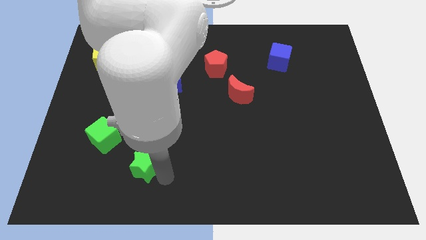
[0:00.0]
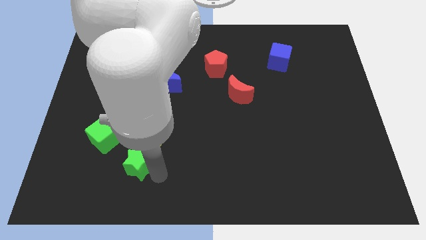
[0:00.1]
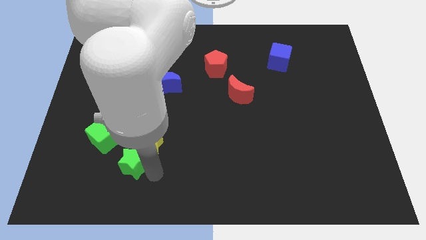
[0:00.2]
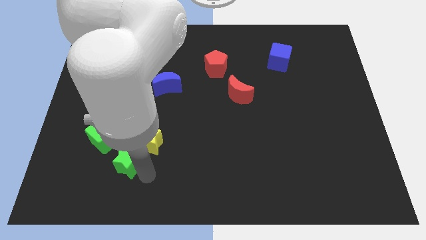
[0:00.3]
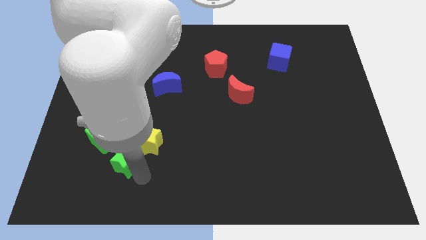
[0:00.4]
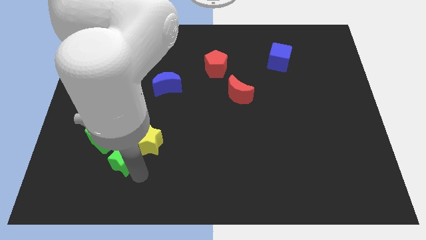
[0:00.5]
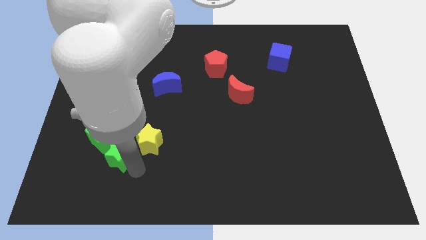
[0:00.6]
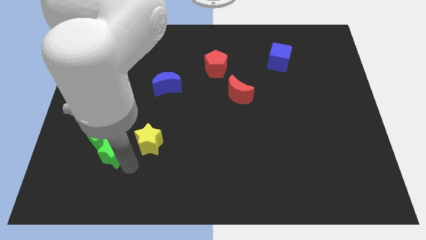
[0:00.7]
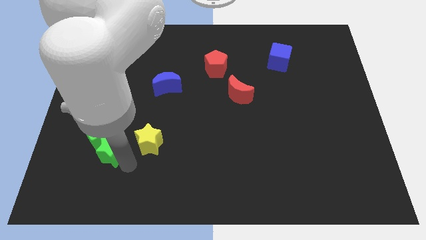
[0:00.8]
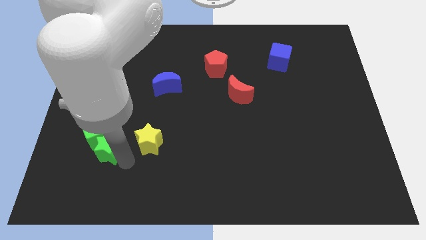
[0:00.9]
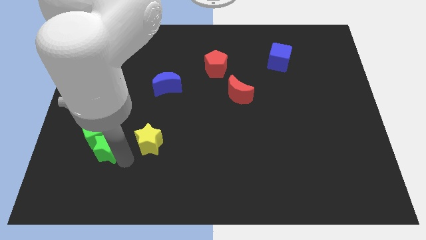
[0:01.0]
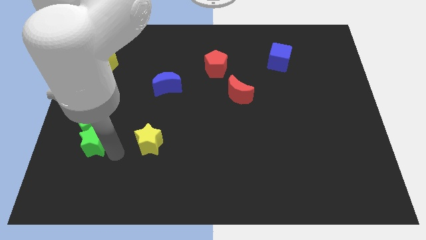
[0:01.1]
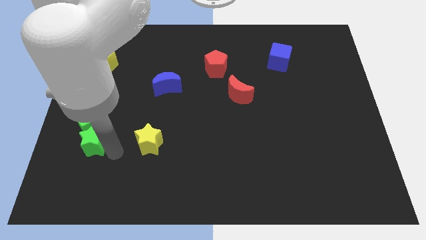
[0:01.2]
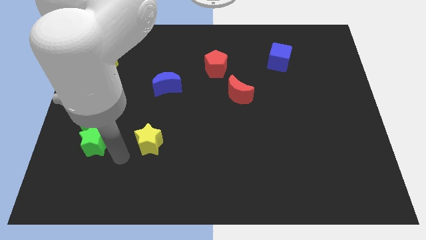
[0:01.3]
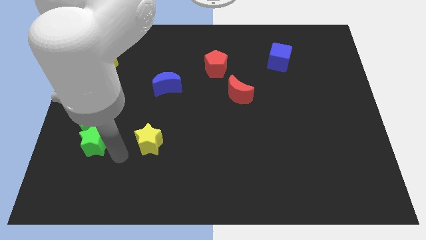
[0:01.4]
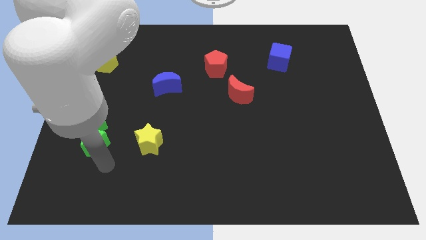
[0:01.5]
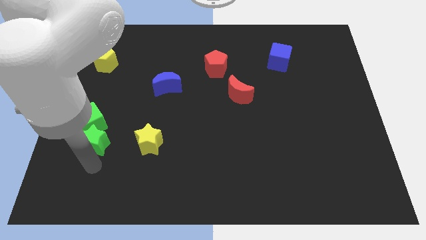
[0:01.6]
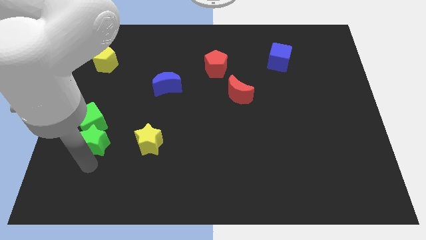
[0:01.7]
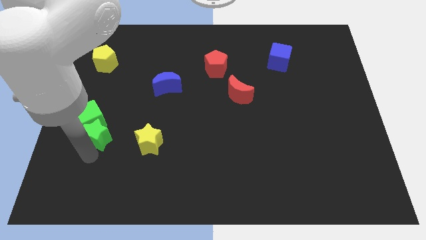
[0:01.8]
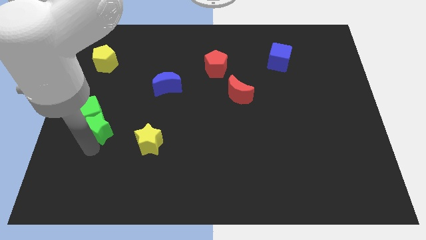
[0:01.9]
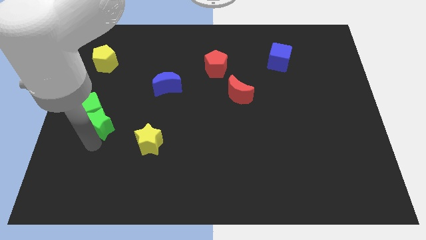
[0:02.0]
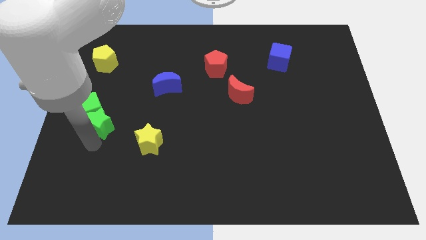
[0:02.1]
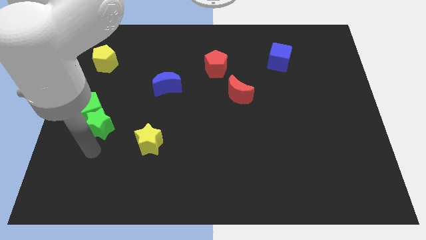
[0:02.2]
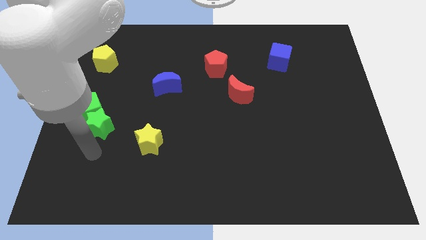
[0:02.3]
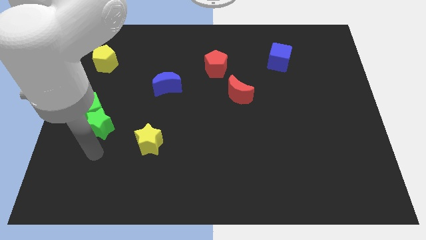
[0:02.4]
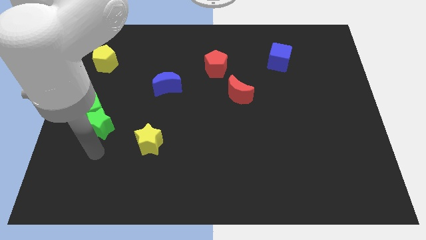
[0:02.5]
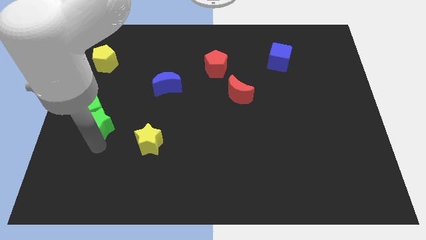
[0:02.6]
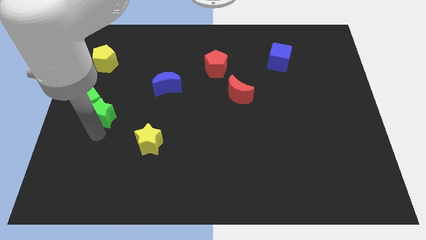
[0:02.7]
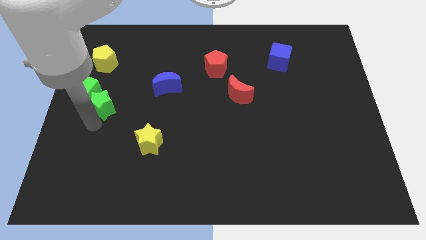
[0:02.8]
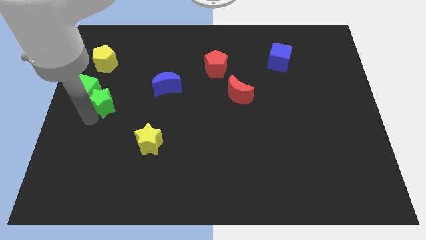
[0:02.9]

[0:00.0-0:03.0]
push green star towards the green cube

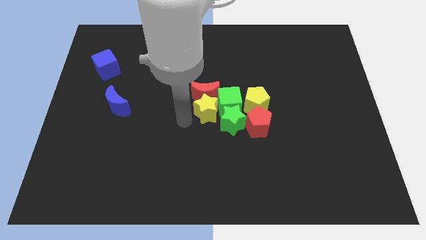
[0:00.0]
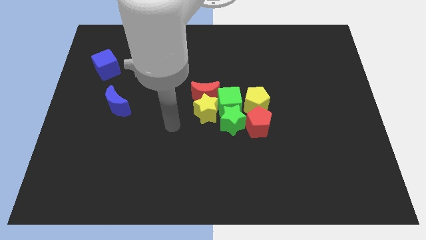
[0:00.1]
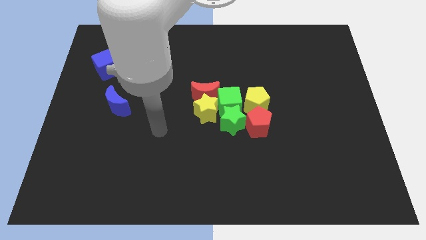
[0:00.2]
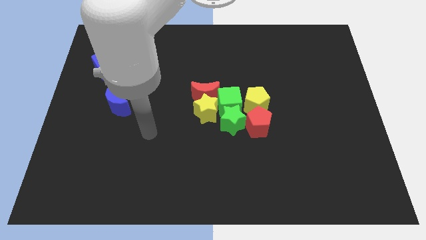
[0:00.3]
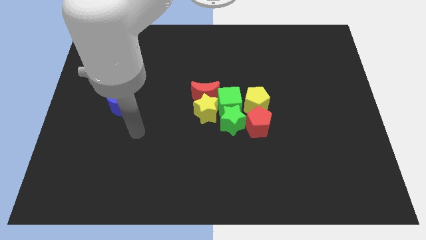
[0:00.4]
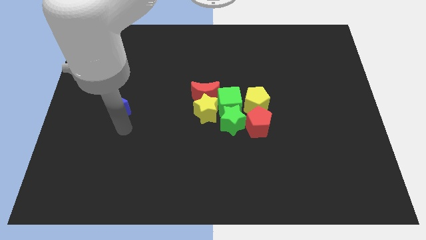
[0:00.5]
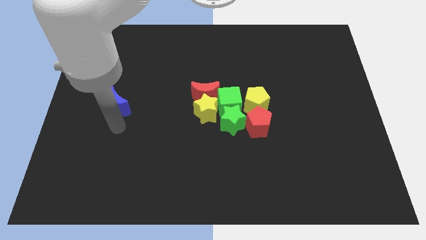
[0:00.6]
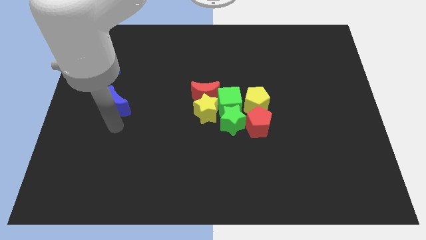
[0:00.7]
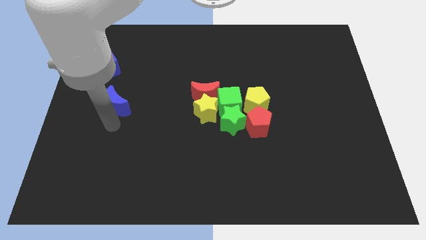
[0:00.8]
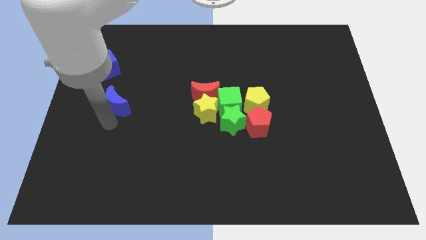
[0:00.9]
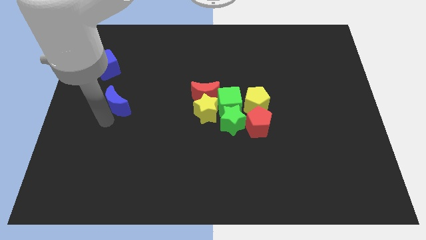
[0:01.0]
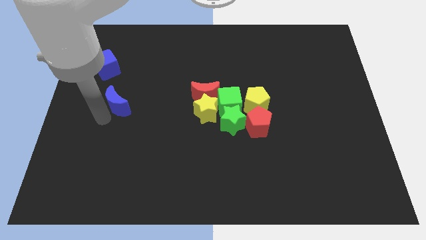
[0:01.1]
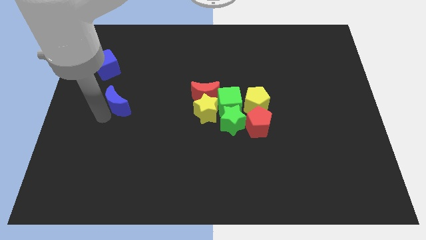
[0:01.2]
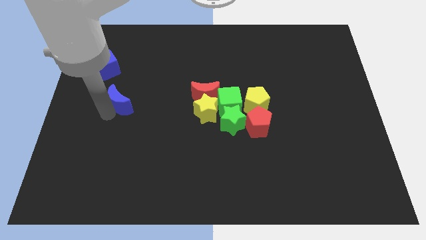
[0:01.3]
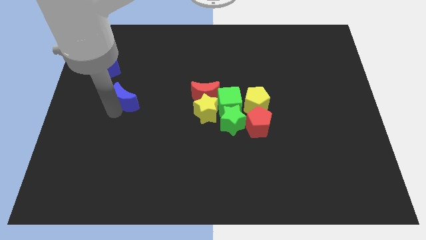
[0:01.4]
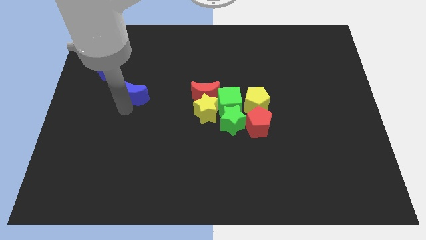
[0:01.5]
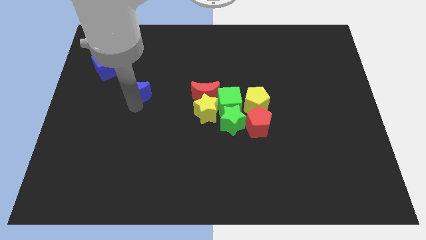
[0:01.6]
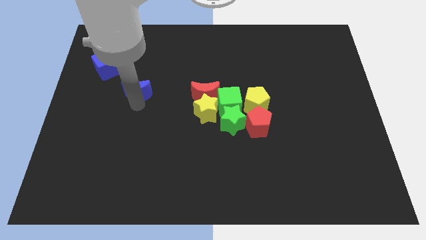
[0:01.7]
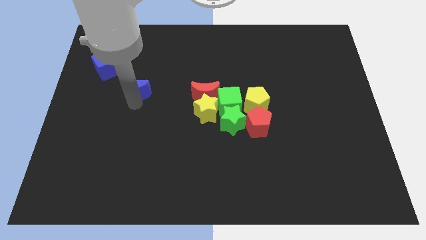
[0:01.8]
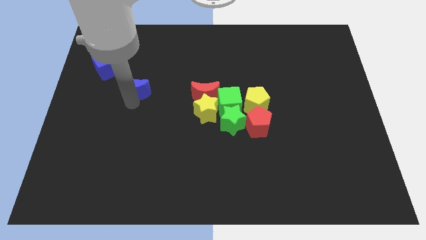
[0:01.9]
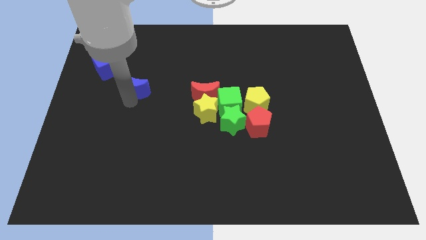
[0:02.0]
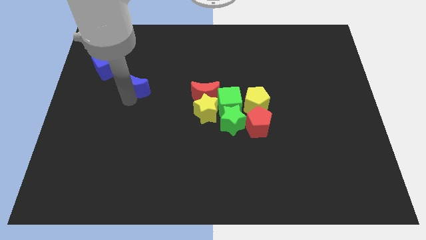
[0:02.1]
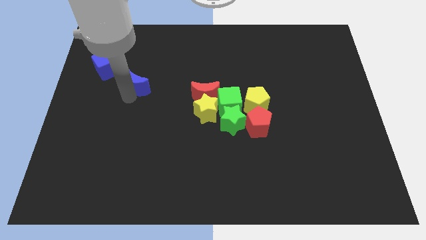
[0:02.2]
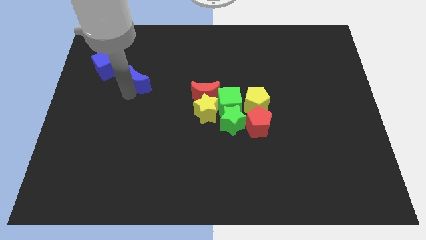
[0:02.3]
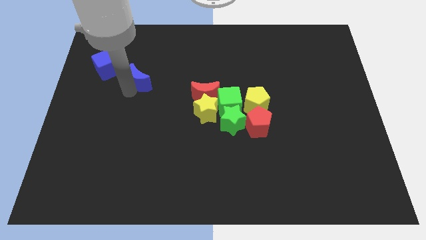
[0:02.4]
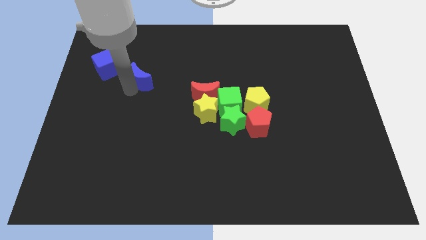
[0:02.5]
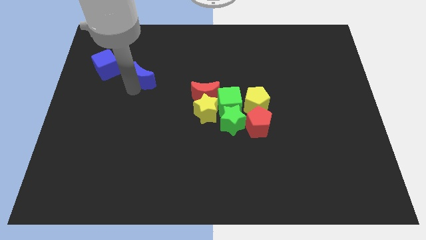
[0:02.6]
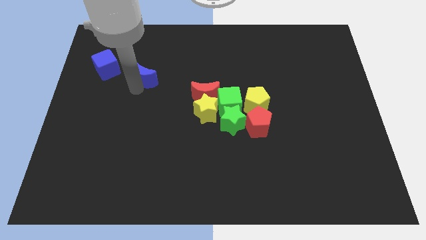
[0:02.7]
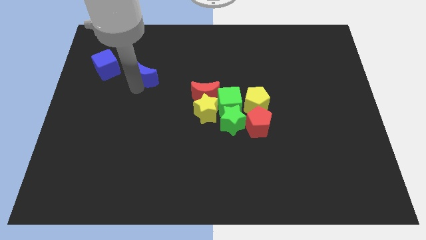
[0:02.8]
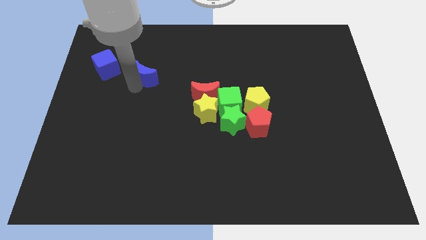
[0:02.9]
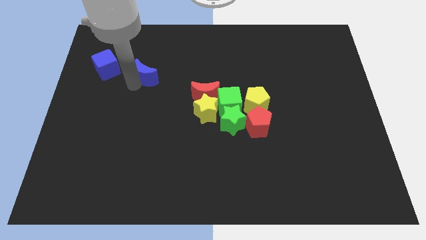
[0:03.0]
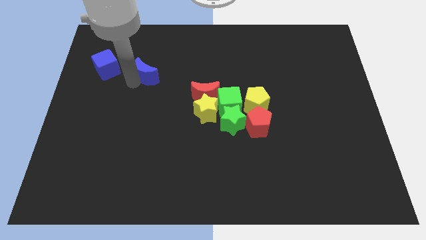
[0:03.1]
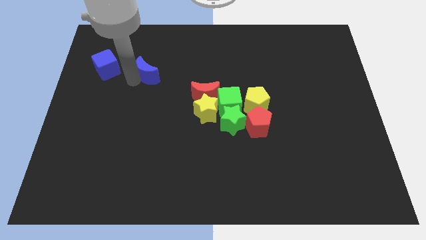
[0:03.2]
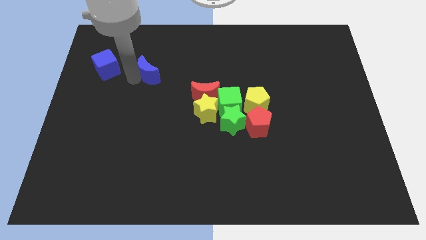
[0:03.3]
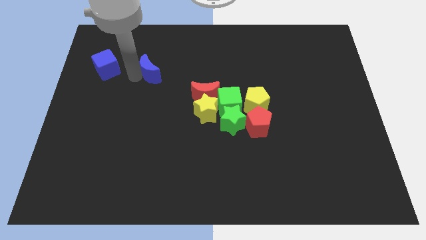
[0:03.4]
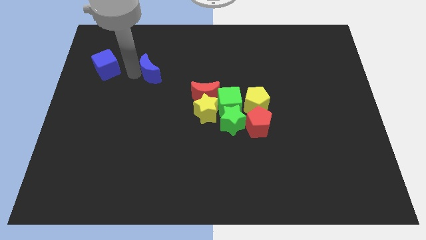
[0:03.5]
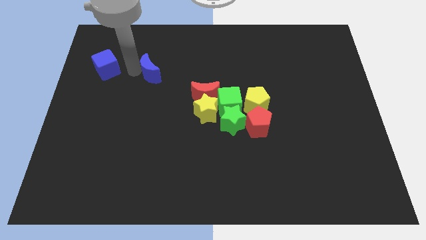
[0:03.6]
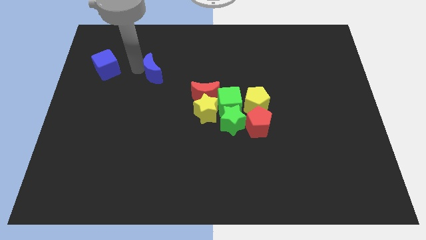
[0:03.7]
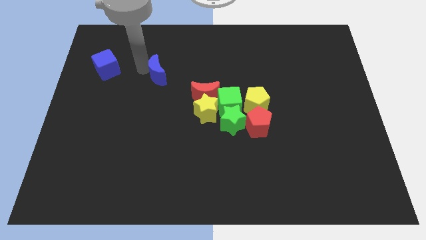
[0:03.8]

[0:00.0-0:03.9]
place the blue crescent to the right of the blue cube

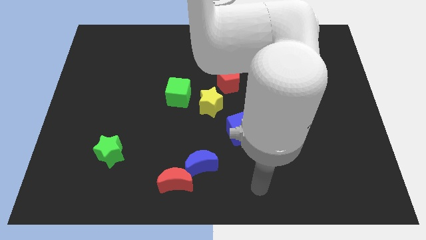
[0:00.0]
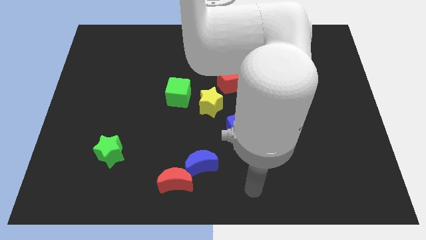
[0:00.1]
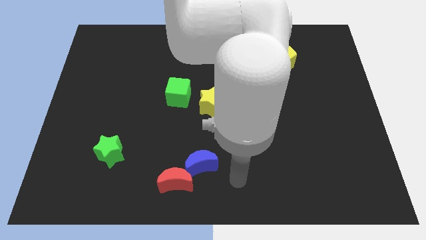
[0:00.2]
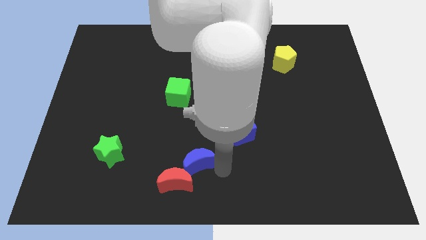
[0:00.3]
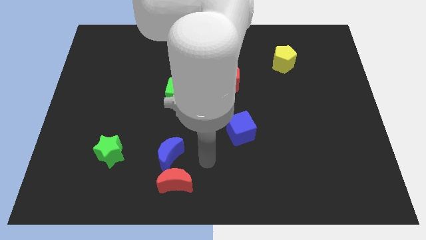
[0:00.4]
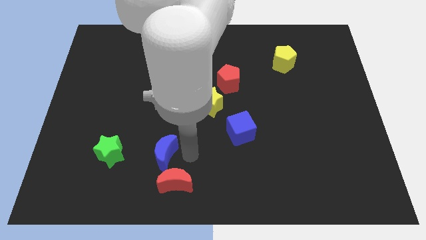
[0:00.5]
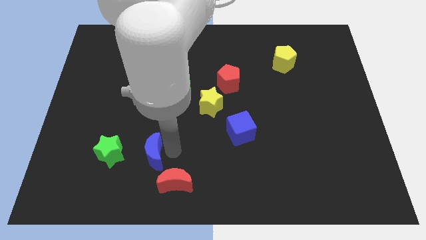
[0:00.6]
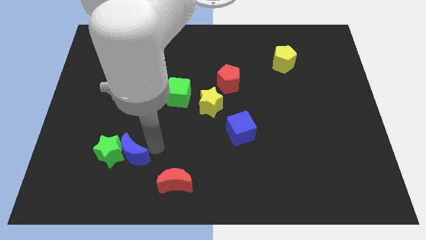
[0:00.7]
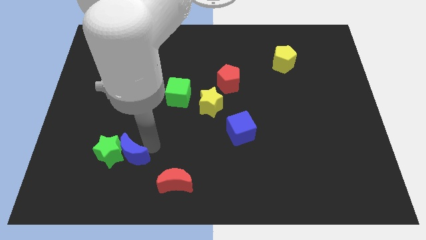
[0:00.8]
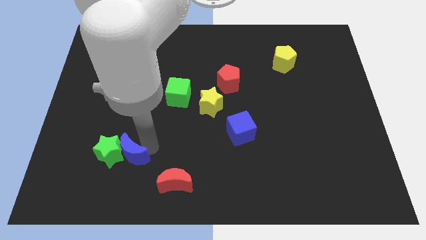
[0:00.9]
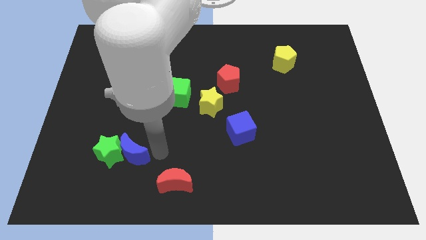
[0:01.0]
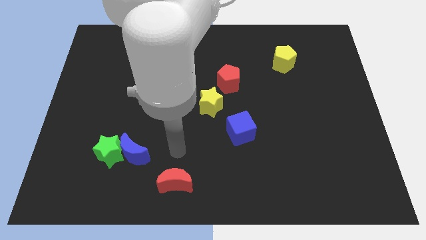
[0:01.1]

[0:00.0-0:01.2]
push the blue moon away from the red moon

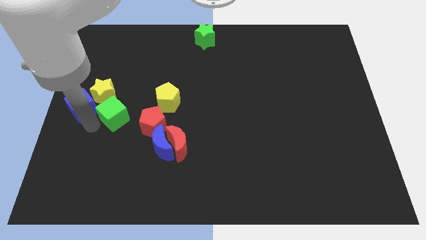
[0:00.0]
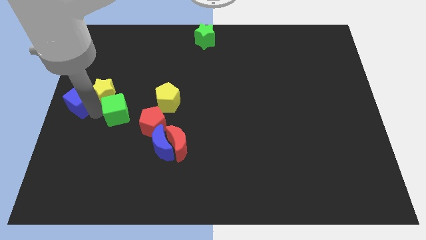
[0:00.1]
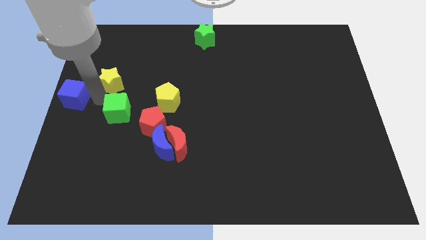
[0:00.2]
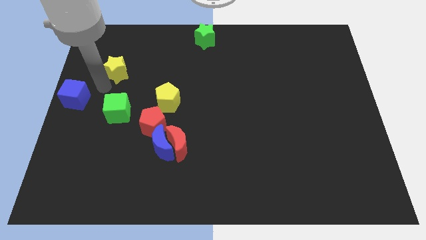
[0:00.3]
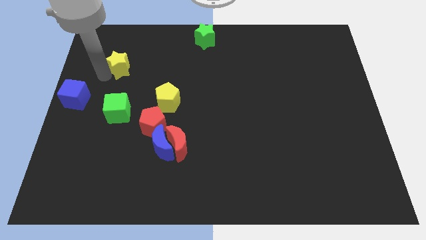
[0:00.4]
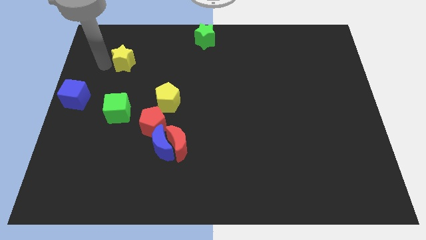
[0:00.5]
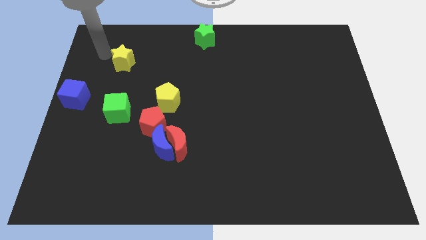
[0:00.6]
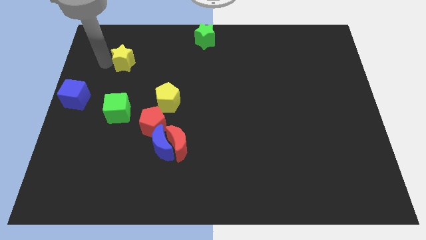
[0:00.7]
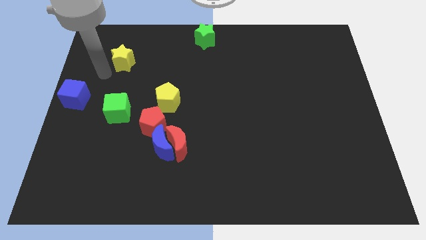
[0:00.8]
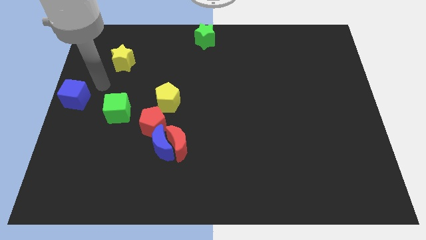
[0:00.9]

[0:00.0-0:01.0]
move the yellow star to the top left of the yellow pentagon
